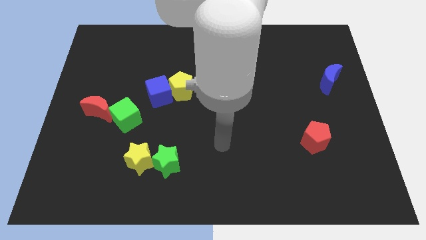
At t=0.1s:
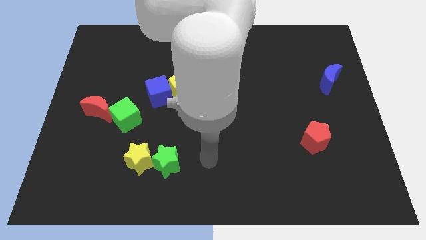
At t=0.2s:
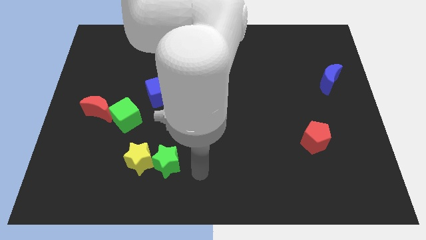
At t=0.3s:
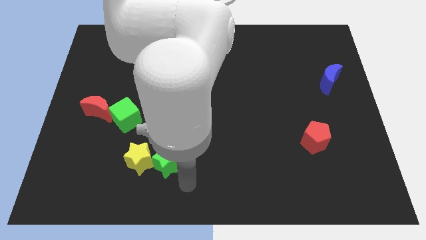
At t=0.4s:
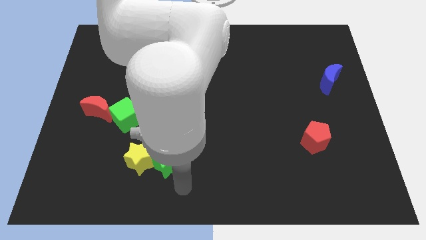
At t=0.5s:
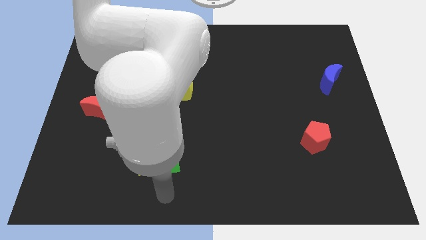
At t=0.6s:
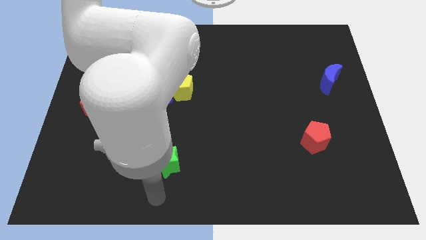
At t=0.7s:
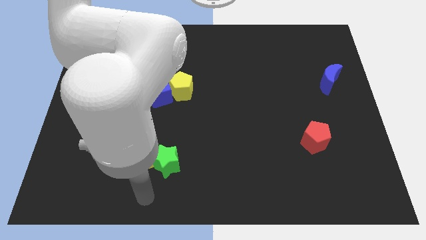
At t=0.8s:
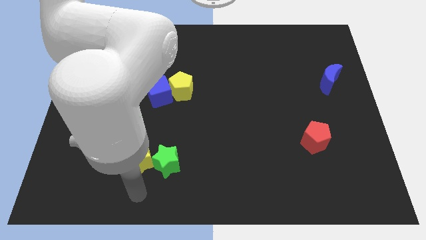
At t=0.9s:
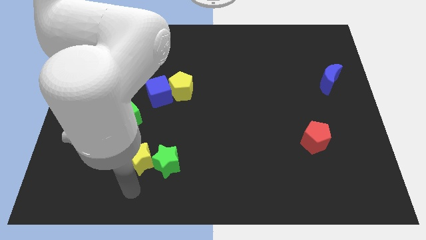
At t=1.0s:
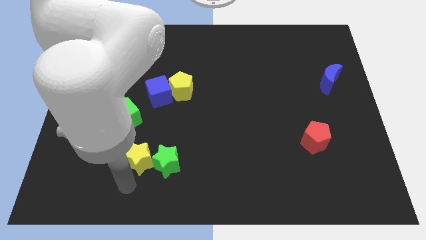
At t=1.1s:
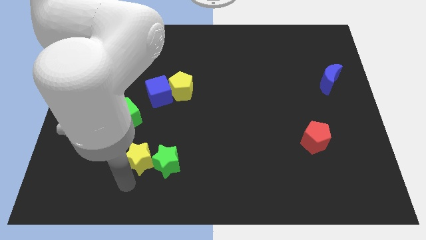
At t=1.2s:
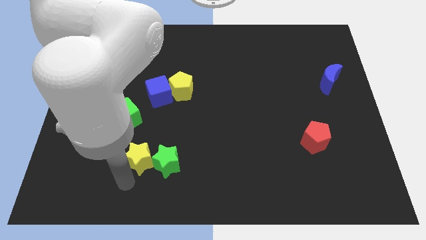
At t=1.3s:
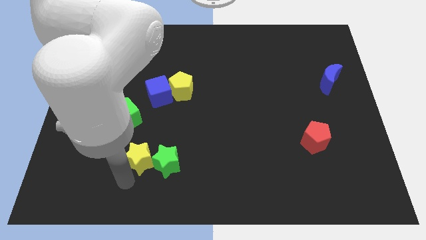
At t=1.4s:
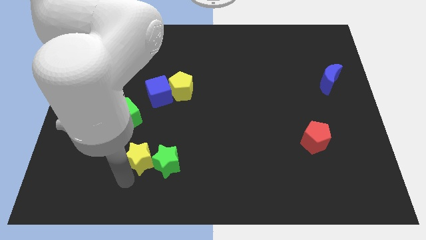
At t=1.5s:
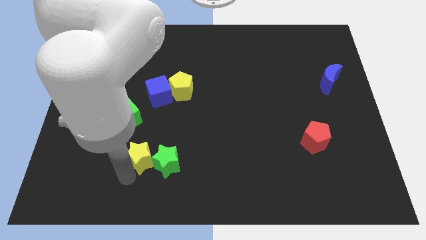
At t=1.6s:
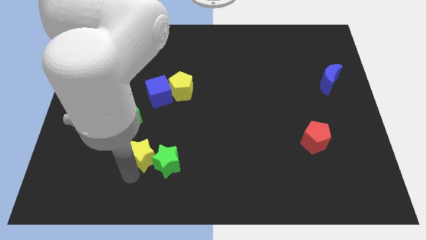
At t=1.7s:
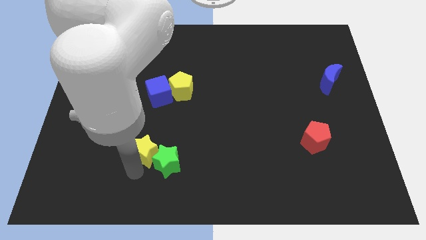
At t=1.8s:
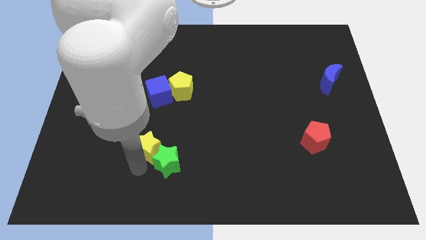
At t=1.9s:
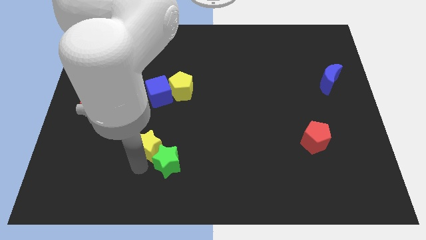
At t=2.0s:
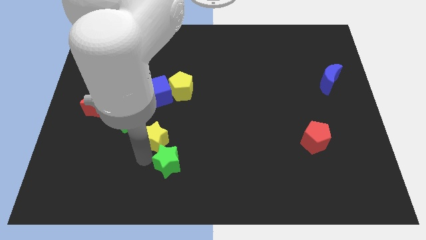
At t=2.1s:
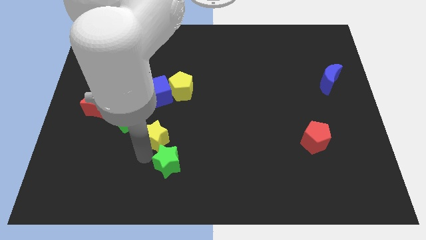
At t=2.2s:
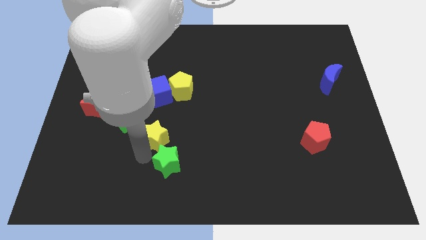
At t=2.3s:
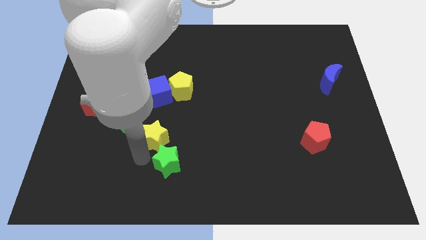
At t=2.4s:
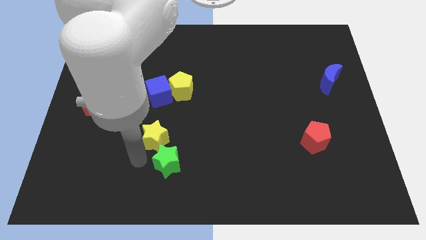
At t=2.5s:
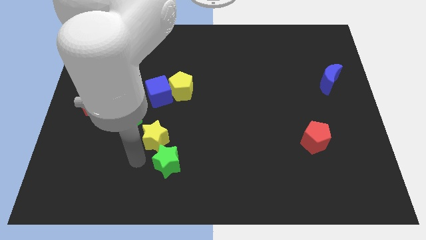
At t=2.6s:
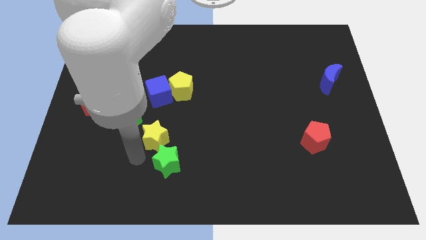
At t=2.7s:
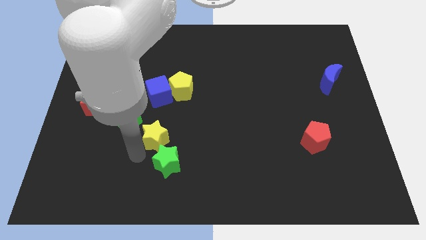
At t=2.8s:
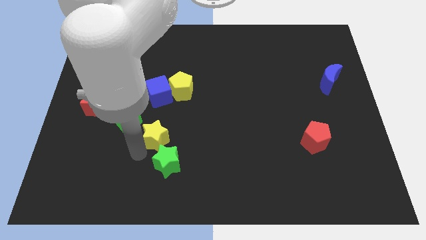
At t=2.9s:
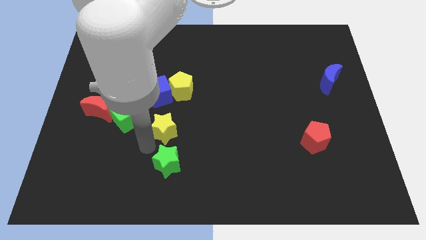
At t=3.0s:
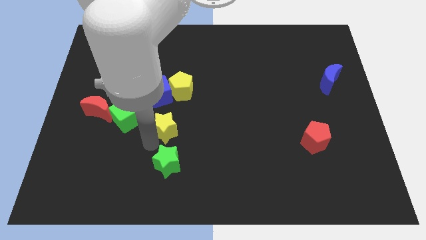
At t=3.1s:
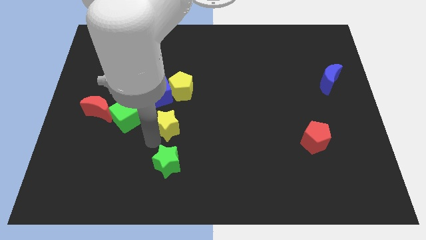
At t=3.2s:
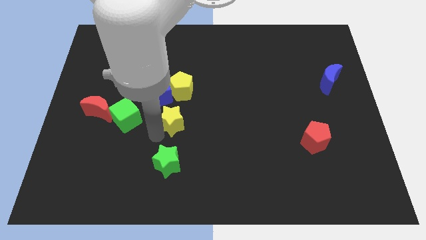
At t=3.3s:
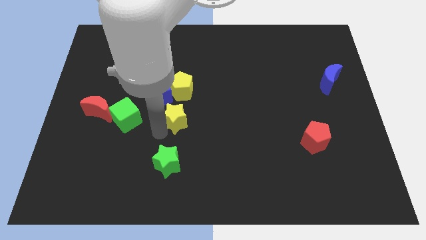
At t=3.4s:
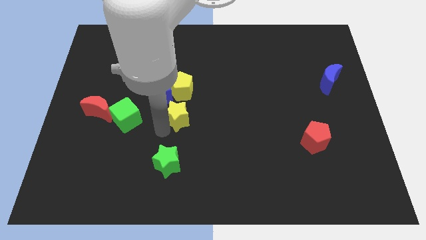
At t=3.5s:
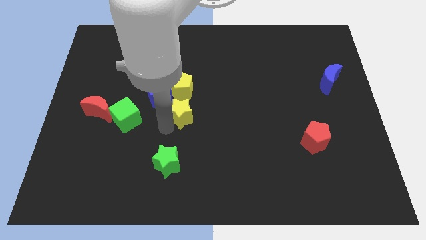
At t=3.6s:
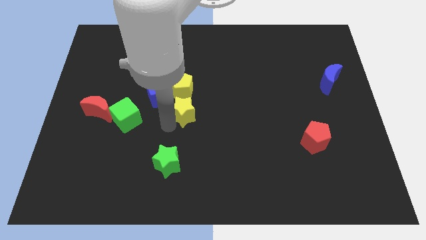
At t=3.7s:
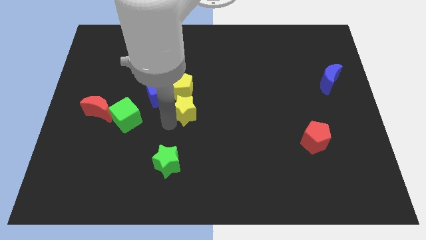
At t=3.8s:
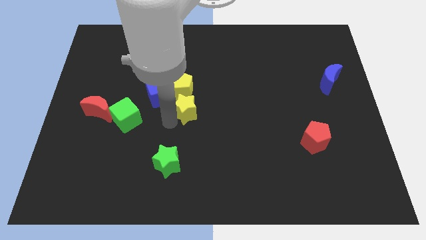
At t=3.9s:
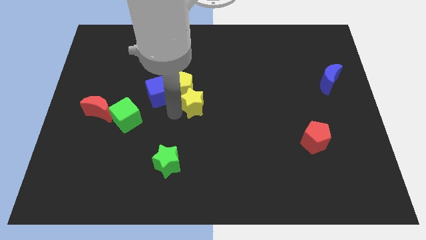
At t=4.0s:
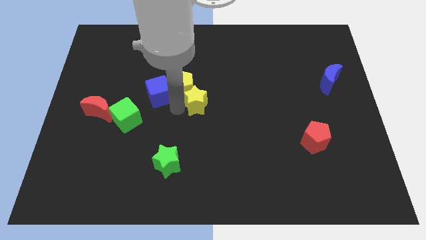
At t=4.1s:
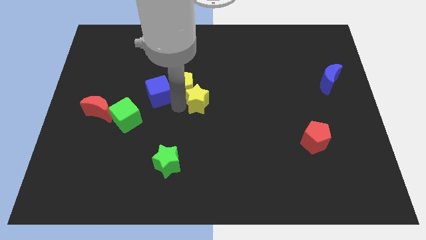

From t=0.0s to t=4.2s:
slide the yellow star towards the yellow pentagon

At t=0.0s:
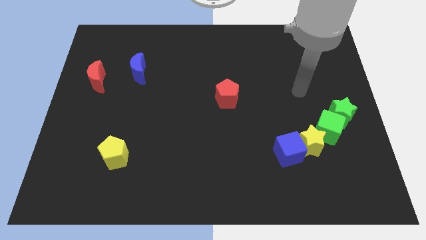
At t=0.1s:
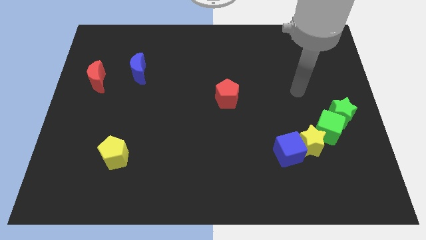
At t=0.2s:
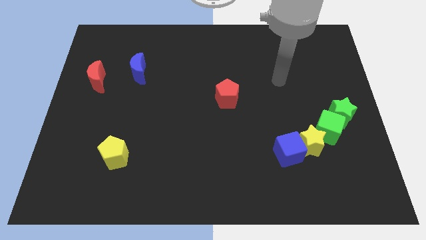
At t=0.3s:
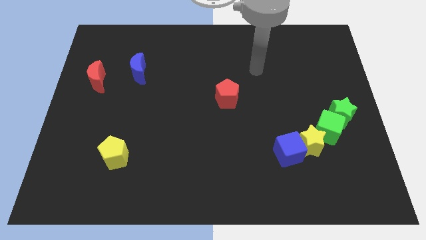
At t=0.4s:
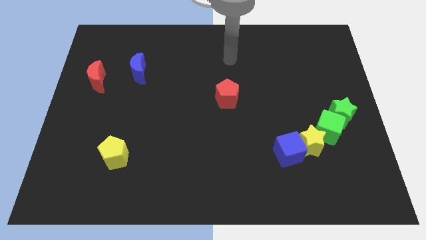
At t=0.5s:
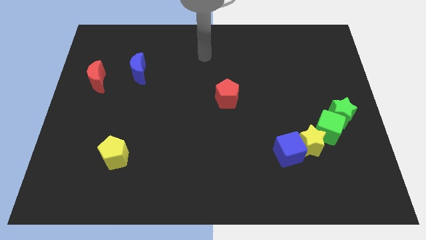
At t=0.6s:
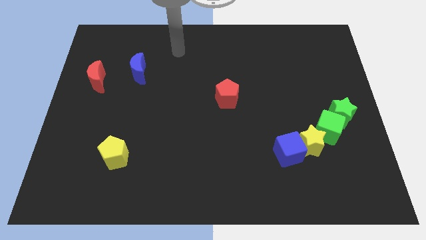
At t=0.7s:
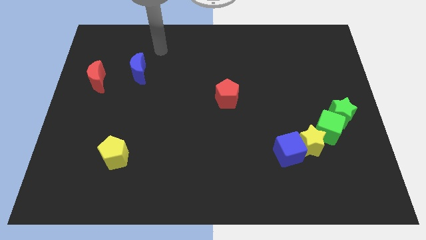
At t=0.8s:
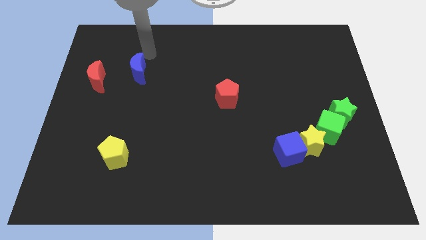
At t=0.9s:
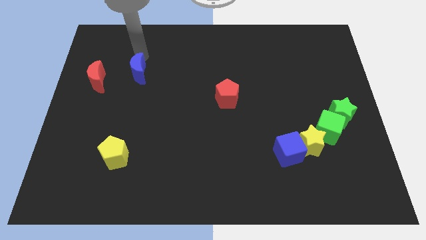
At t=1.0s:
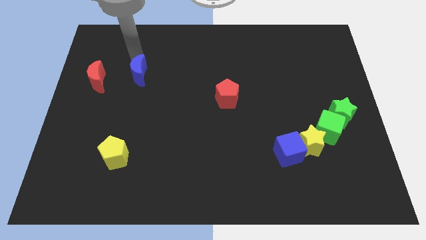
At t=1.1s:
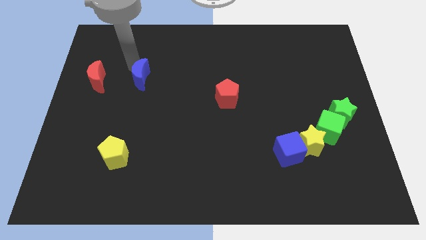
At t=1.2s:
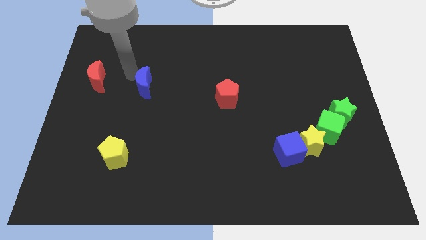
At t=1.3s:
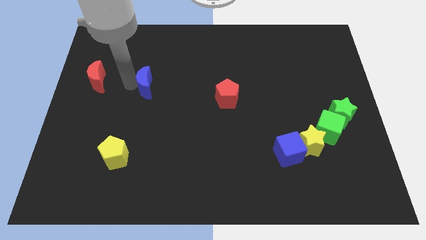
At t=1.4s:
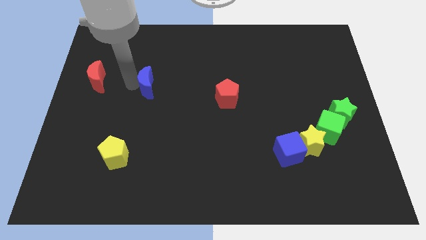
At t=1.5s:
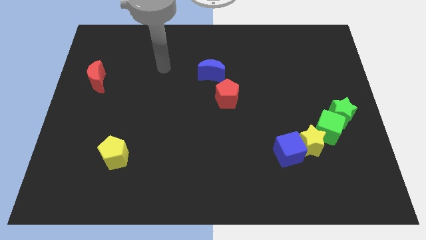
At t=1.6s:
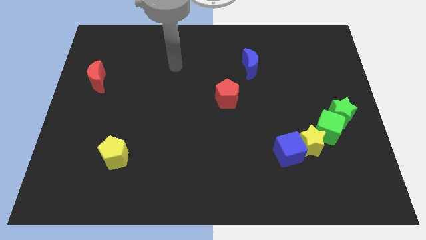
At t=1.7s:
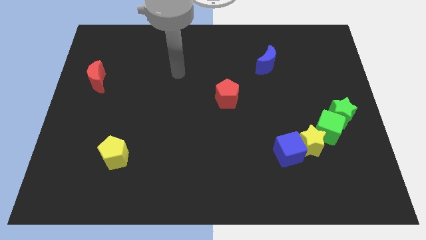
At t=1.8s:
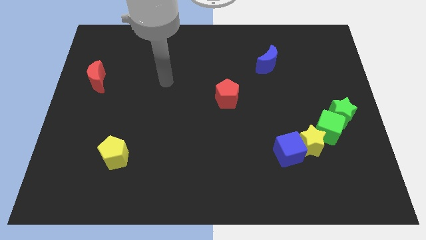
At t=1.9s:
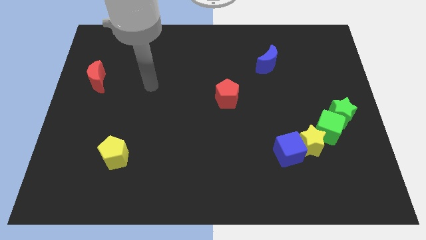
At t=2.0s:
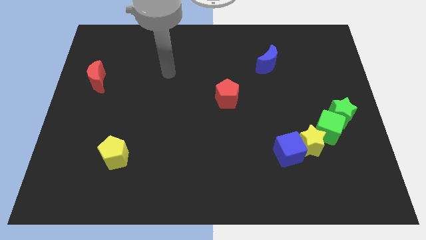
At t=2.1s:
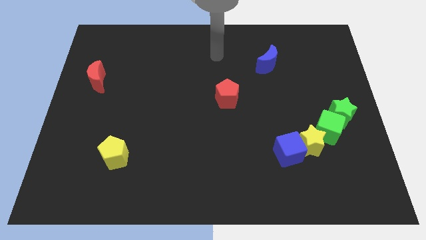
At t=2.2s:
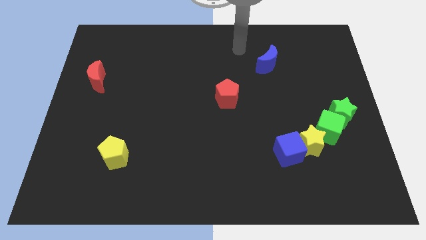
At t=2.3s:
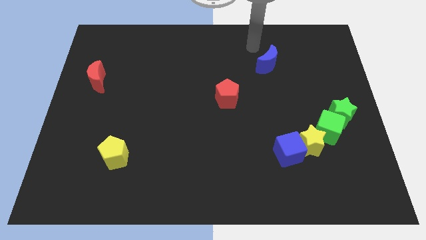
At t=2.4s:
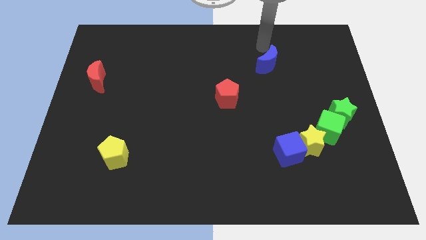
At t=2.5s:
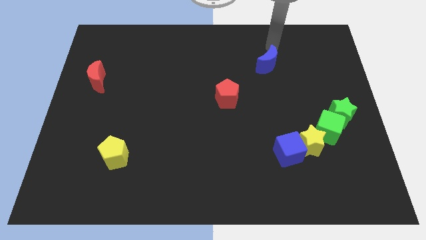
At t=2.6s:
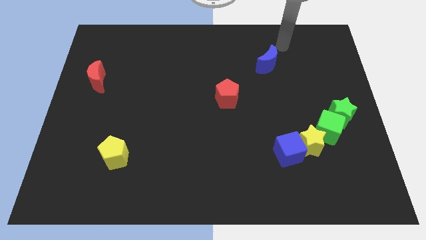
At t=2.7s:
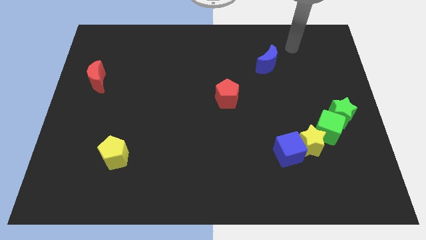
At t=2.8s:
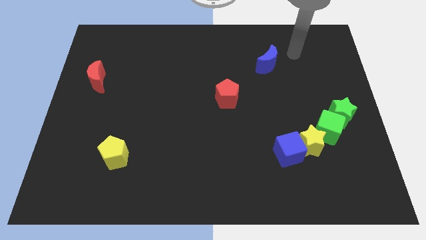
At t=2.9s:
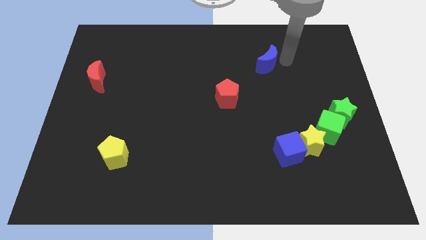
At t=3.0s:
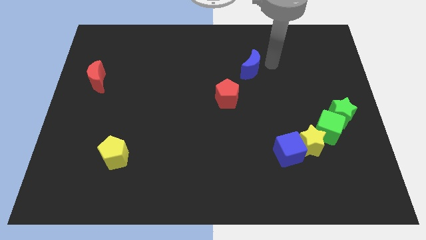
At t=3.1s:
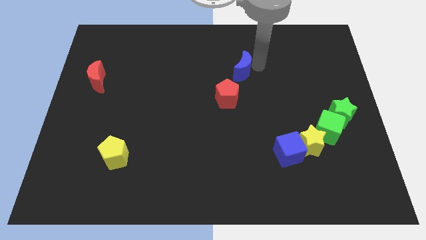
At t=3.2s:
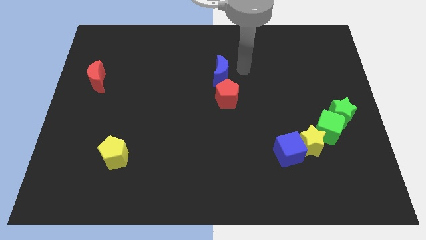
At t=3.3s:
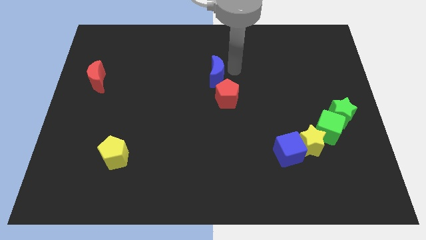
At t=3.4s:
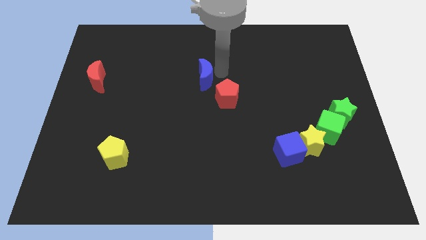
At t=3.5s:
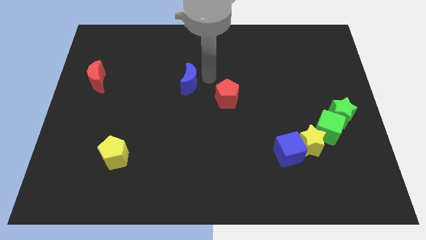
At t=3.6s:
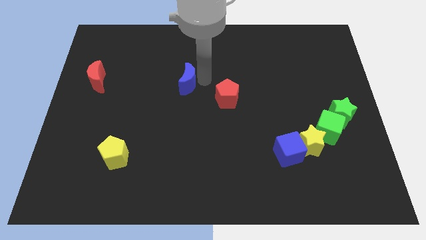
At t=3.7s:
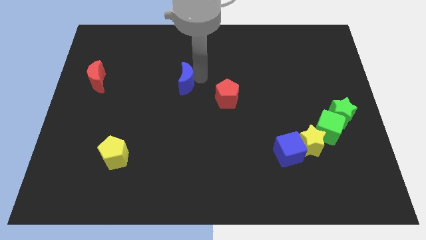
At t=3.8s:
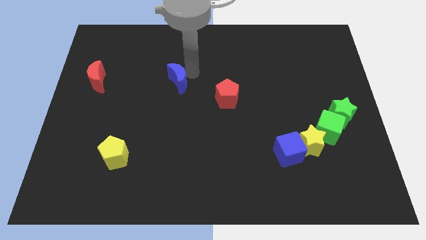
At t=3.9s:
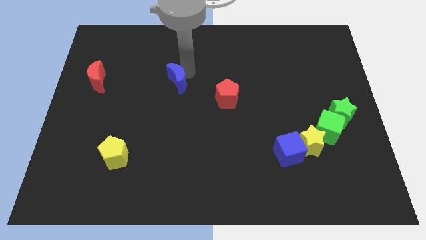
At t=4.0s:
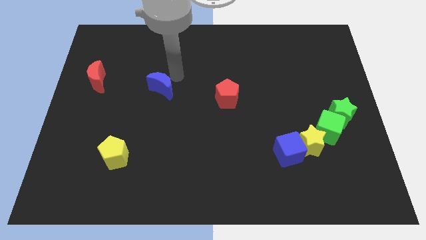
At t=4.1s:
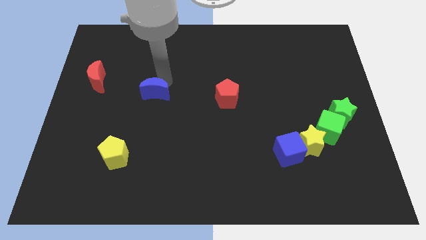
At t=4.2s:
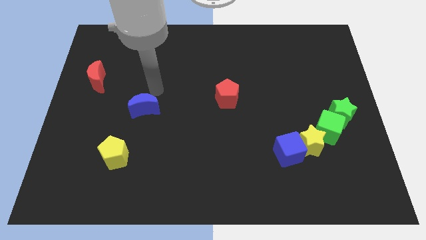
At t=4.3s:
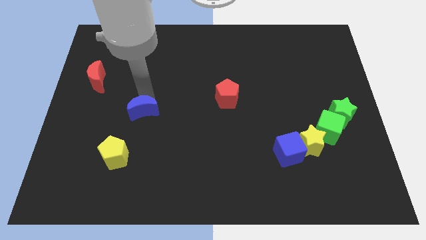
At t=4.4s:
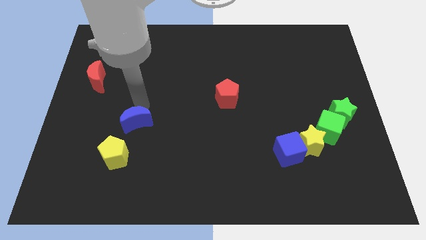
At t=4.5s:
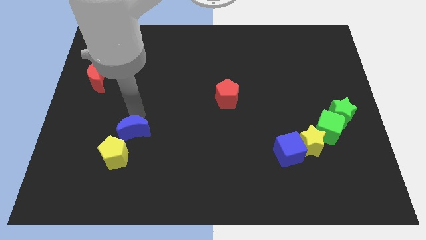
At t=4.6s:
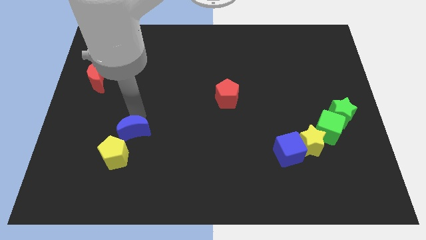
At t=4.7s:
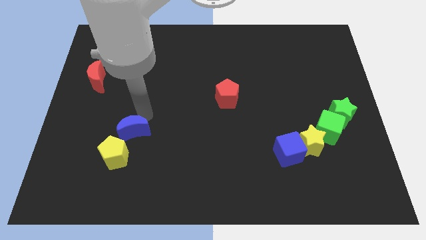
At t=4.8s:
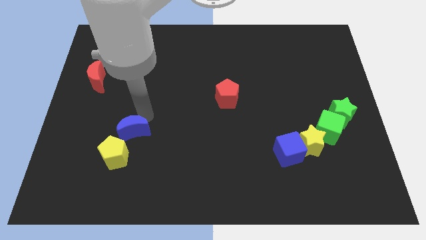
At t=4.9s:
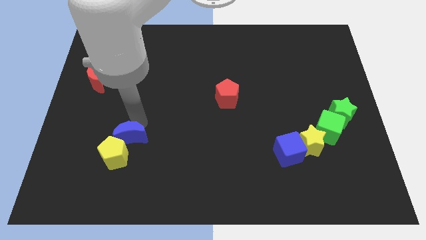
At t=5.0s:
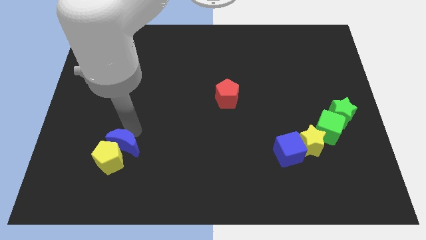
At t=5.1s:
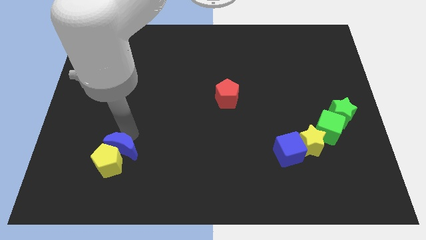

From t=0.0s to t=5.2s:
push the blue moon next to the yellow pentagon
